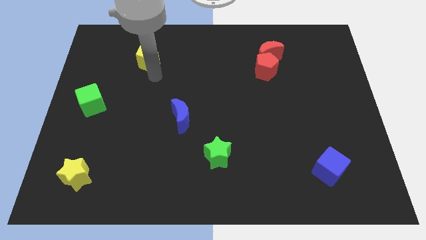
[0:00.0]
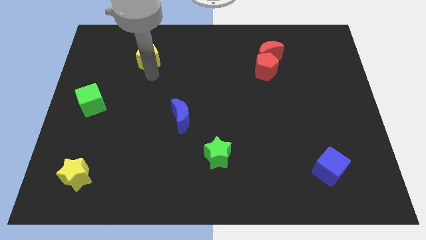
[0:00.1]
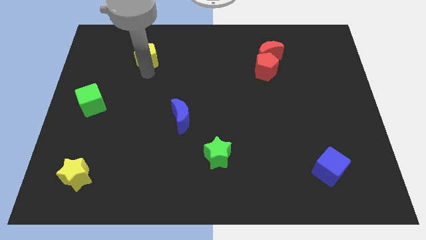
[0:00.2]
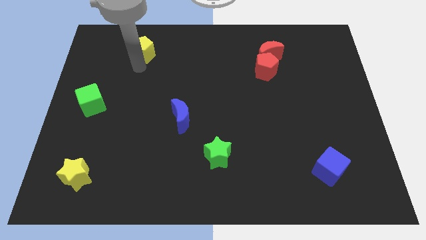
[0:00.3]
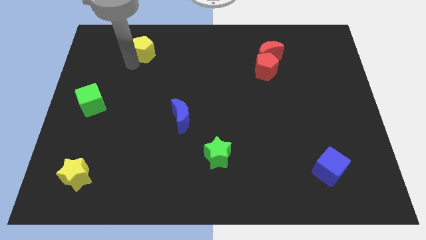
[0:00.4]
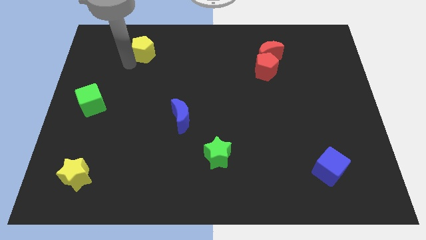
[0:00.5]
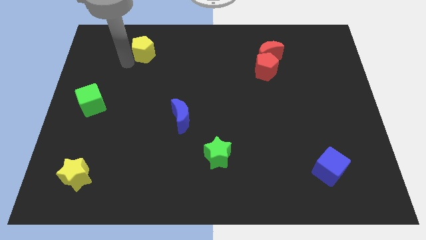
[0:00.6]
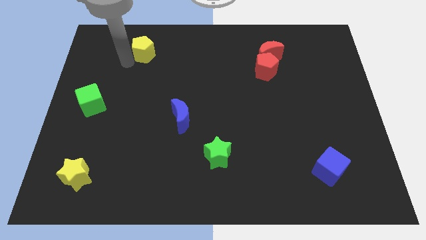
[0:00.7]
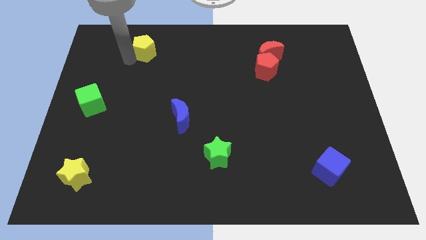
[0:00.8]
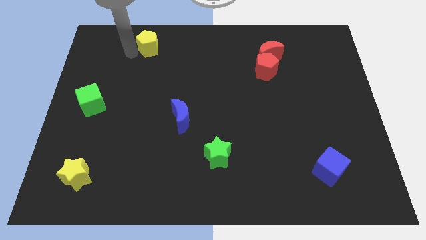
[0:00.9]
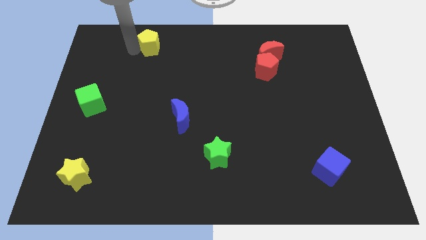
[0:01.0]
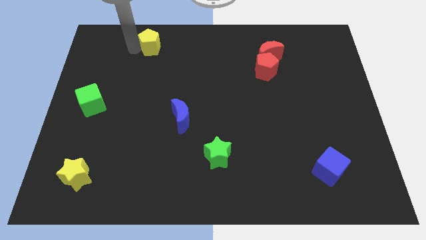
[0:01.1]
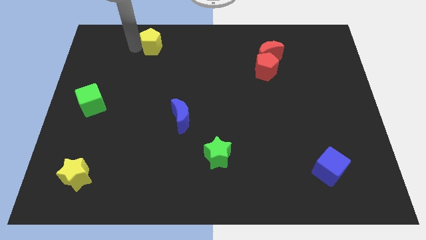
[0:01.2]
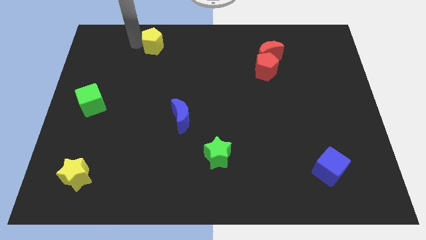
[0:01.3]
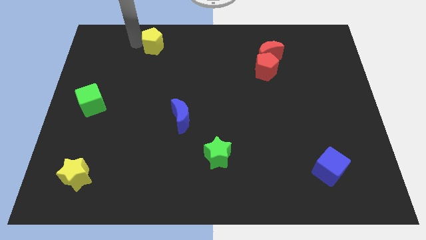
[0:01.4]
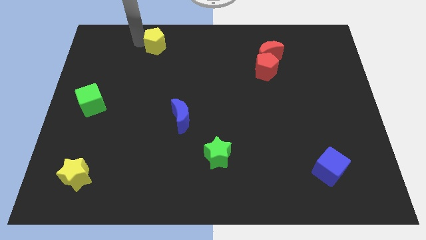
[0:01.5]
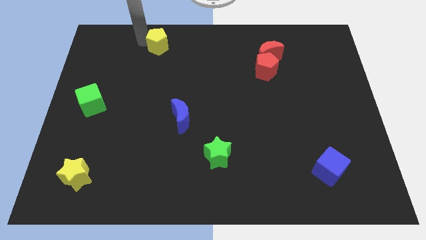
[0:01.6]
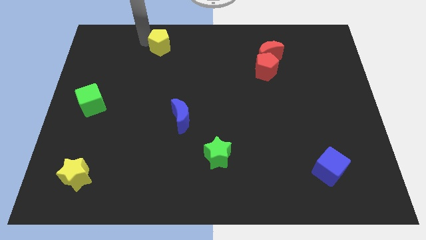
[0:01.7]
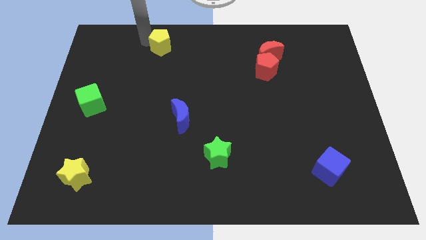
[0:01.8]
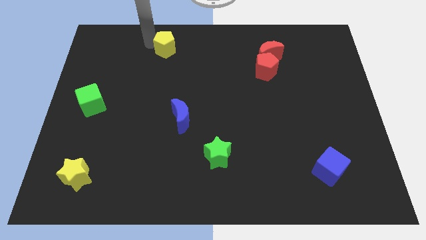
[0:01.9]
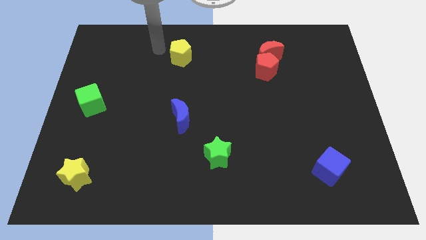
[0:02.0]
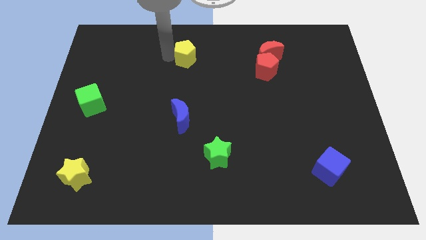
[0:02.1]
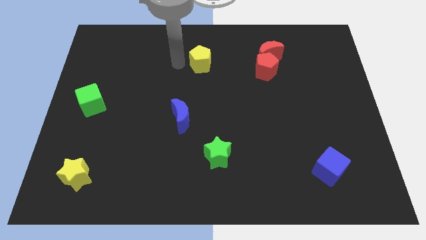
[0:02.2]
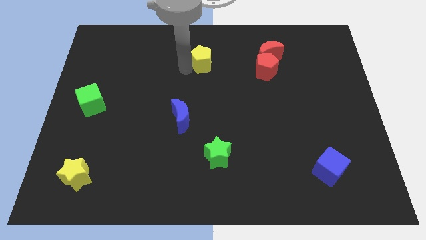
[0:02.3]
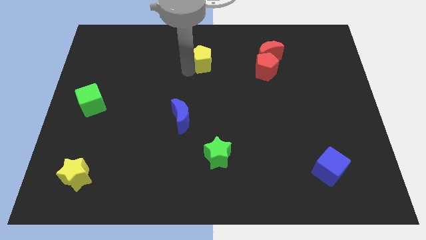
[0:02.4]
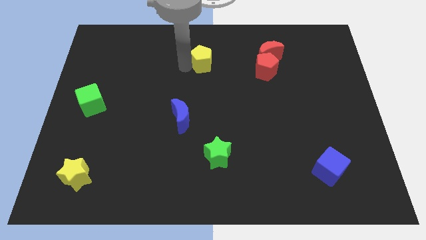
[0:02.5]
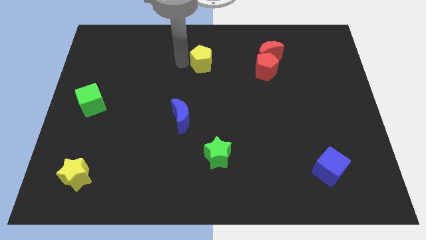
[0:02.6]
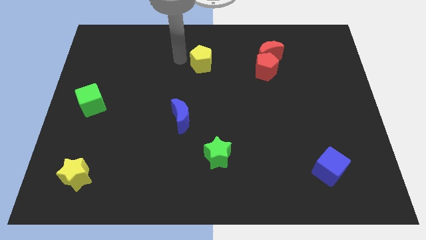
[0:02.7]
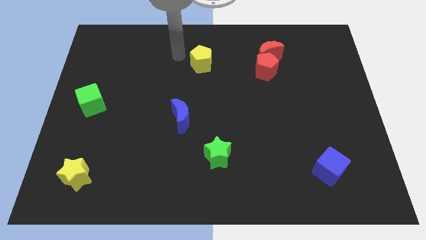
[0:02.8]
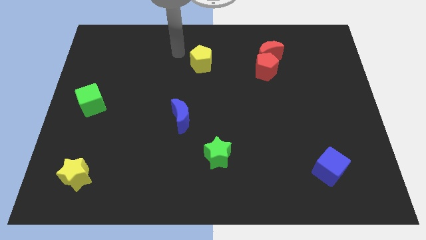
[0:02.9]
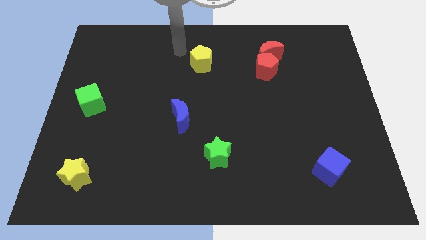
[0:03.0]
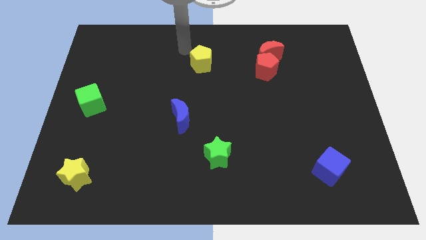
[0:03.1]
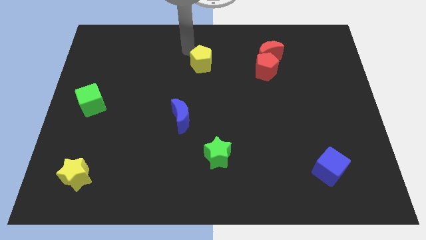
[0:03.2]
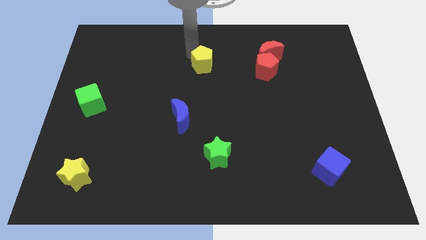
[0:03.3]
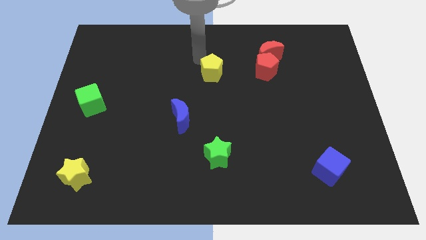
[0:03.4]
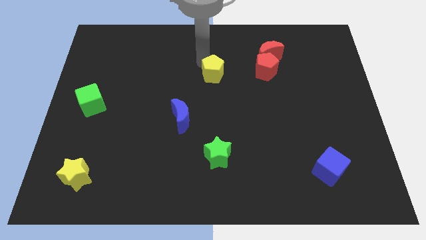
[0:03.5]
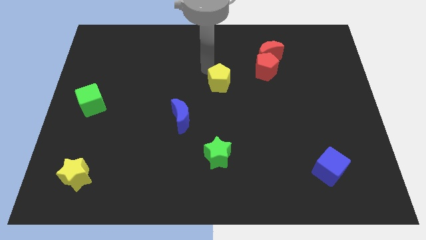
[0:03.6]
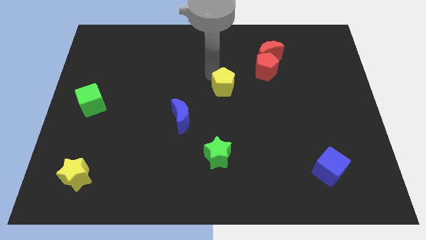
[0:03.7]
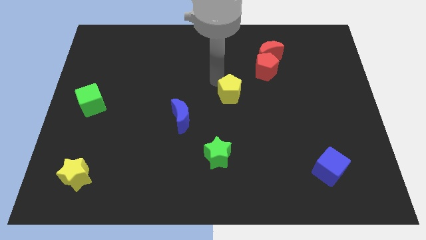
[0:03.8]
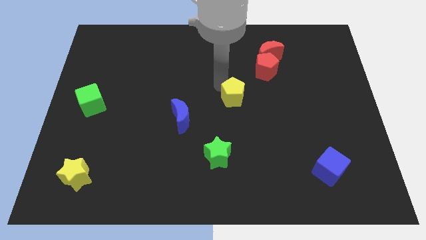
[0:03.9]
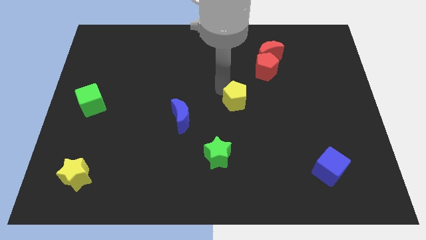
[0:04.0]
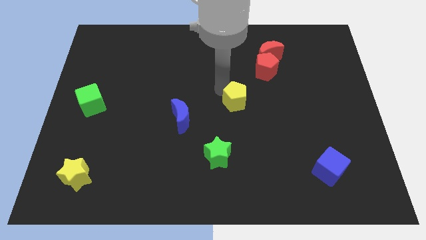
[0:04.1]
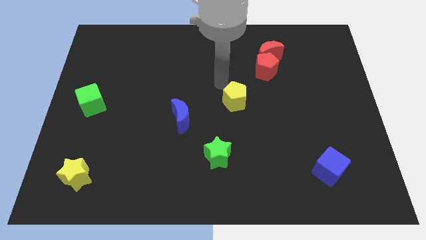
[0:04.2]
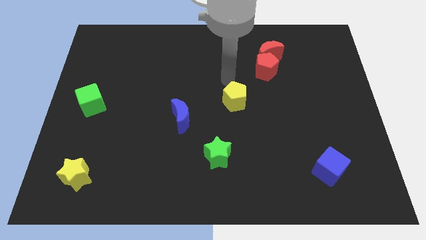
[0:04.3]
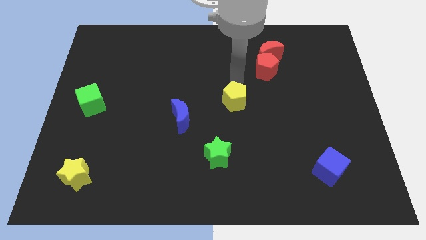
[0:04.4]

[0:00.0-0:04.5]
move the yellow pentagon diagonally to the bottom left side of the red pentagon

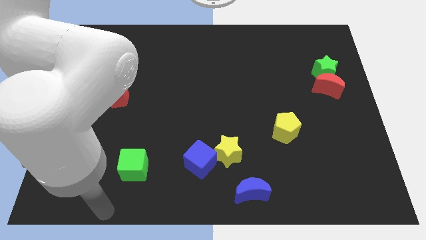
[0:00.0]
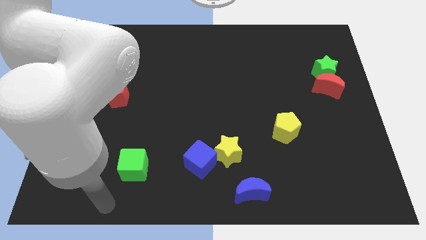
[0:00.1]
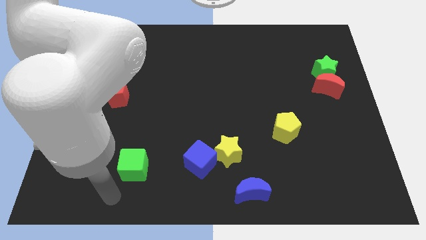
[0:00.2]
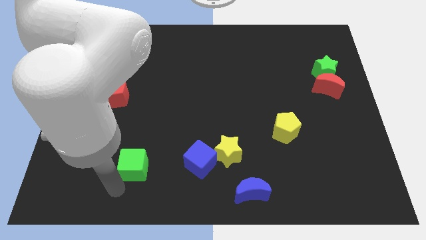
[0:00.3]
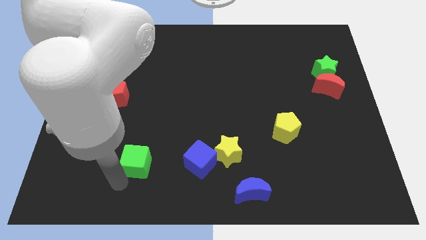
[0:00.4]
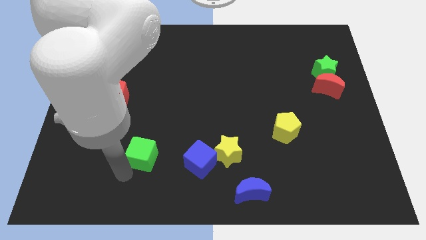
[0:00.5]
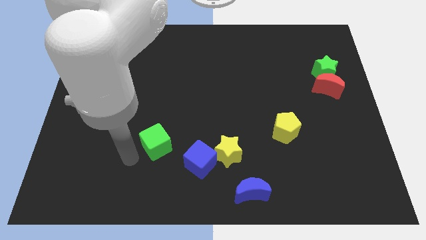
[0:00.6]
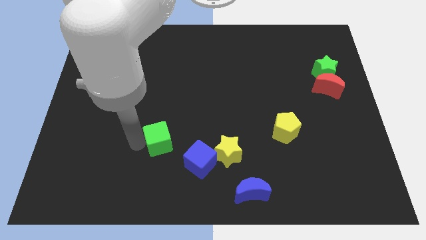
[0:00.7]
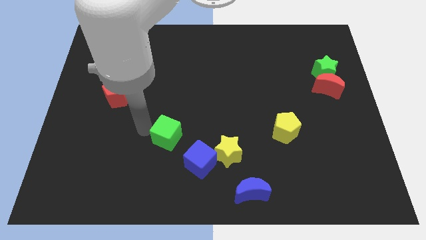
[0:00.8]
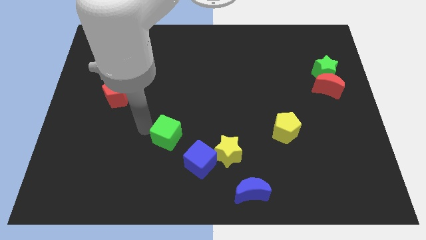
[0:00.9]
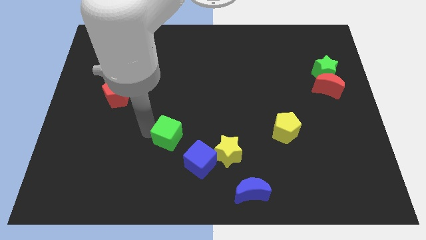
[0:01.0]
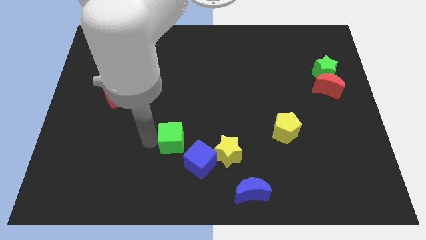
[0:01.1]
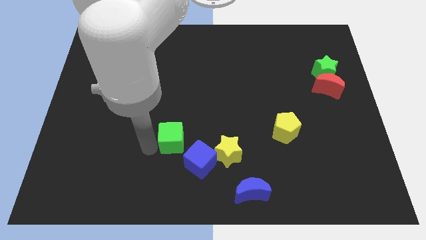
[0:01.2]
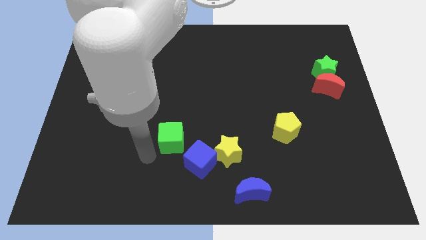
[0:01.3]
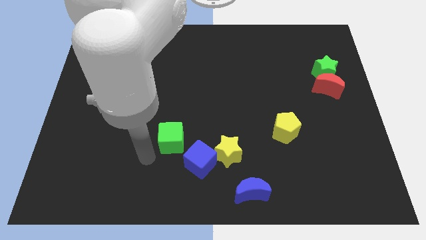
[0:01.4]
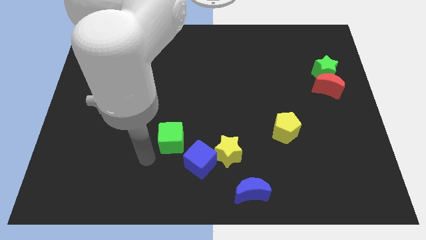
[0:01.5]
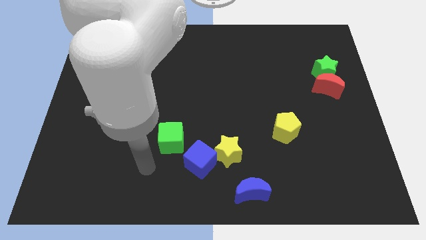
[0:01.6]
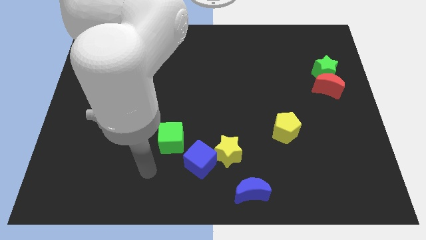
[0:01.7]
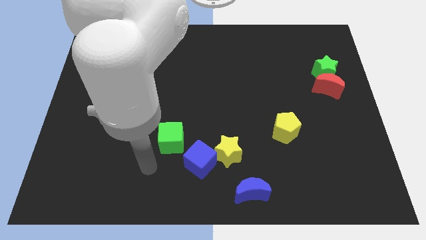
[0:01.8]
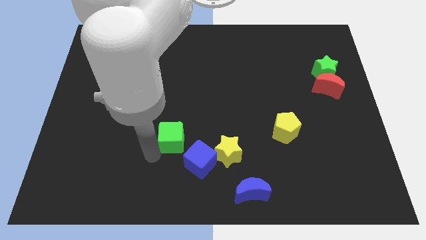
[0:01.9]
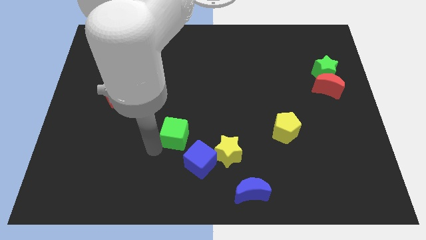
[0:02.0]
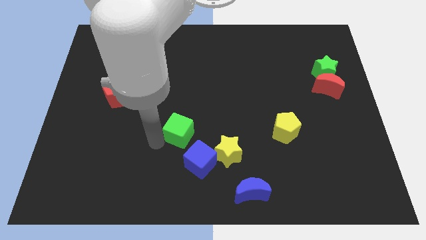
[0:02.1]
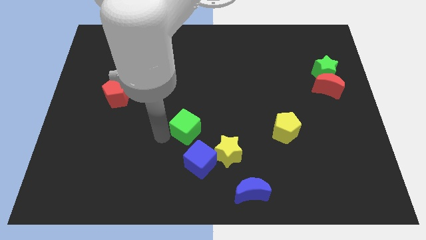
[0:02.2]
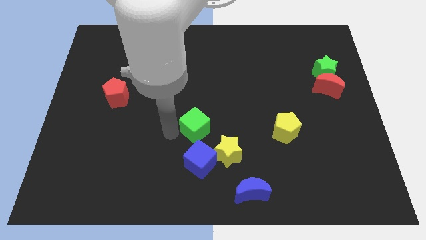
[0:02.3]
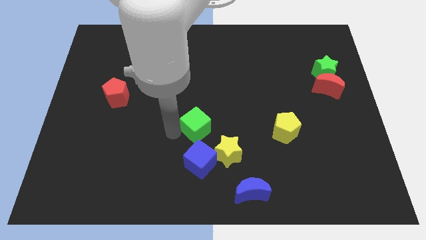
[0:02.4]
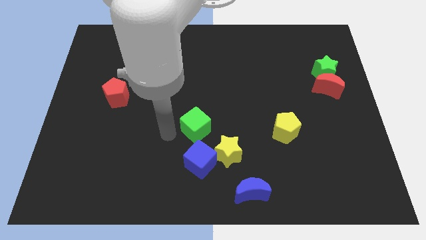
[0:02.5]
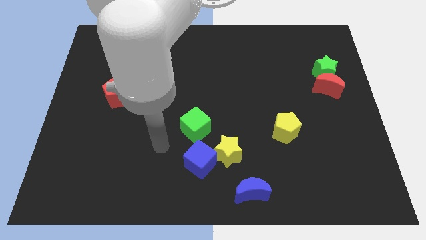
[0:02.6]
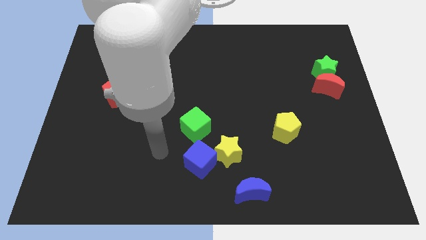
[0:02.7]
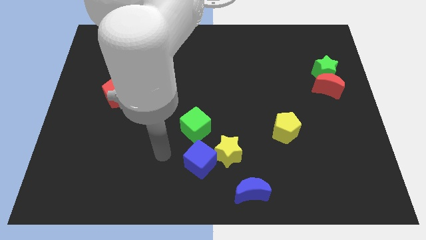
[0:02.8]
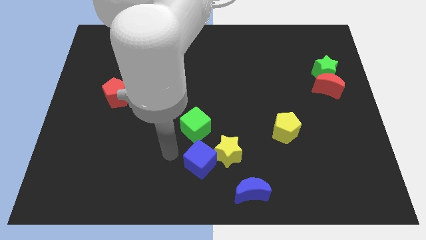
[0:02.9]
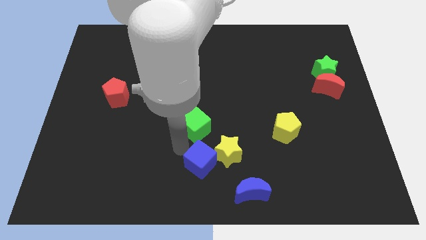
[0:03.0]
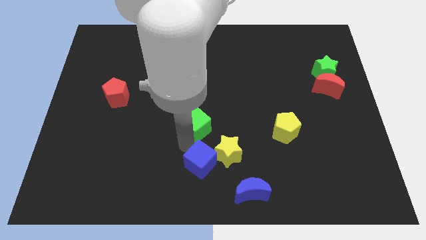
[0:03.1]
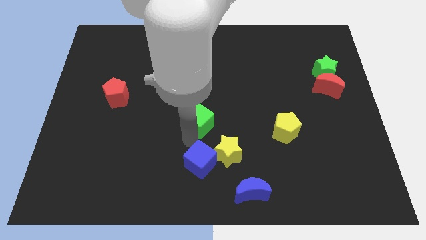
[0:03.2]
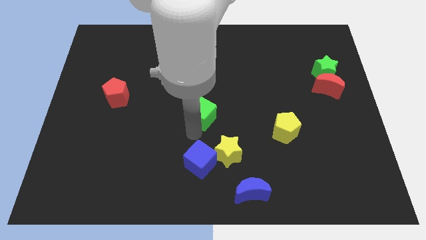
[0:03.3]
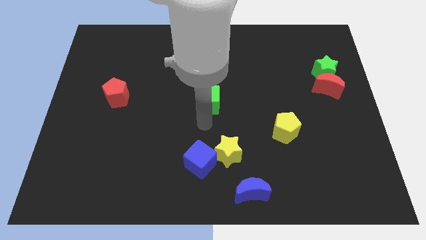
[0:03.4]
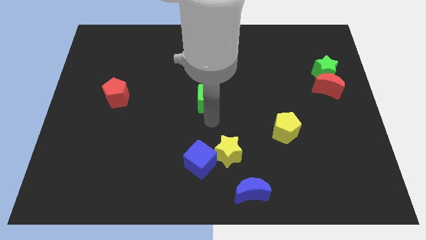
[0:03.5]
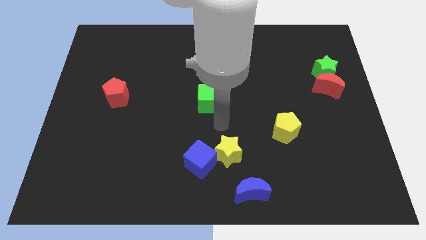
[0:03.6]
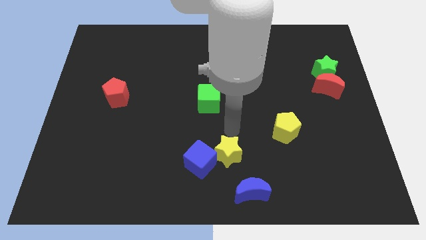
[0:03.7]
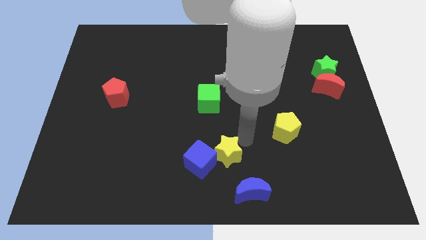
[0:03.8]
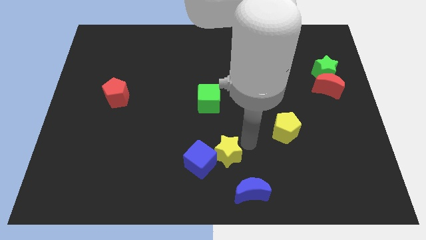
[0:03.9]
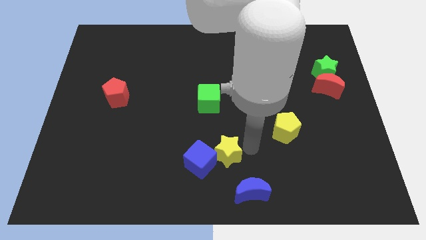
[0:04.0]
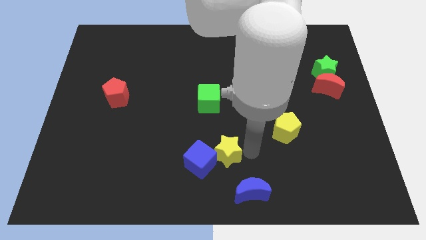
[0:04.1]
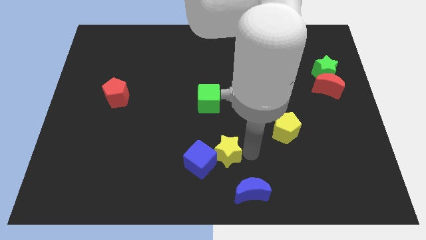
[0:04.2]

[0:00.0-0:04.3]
move the green cube to the middle of the board

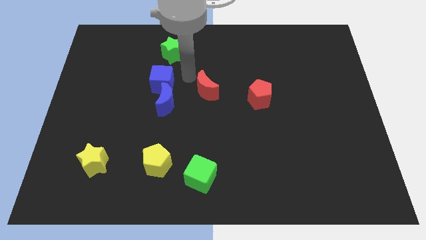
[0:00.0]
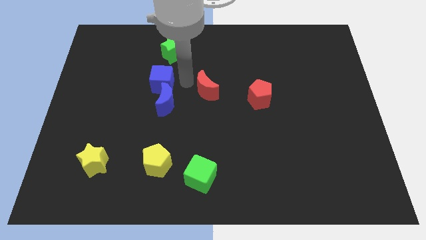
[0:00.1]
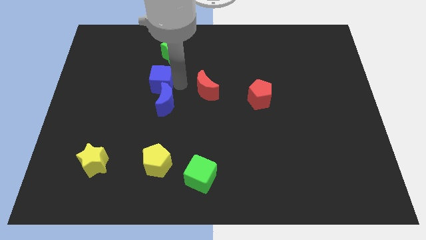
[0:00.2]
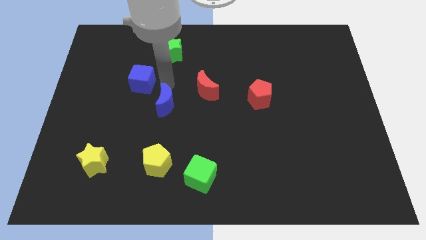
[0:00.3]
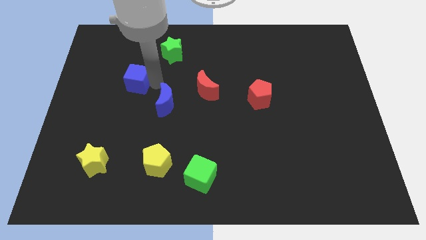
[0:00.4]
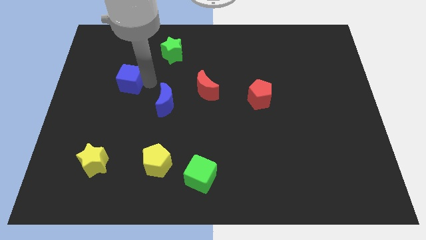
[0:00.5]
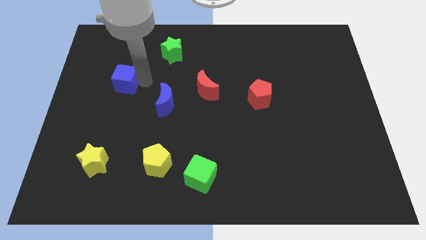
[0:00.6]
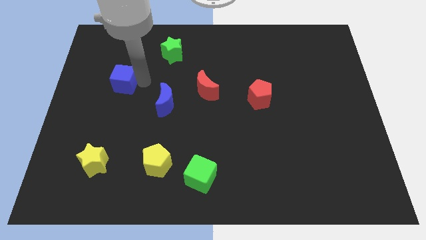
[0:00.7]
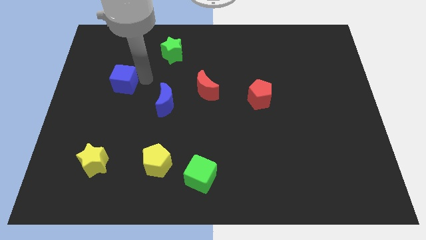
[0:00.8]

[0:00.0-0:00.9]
push the blue cube to the top left of the blue crescent
